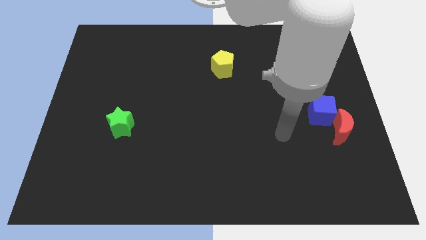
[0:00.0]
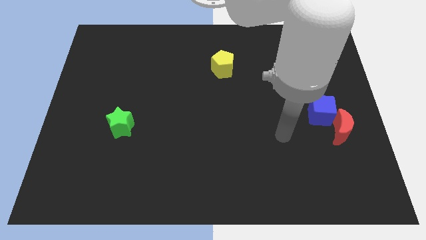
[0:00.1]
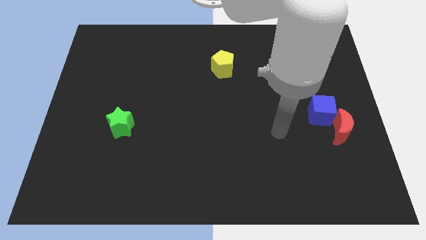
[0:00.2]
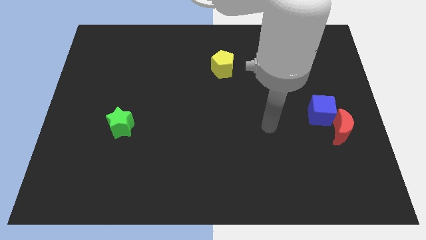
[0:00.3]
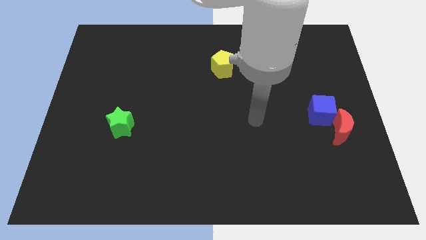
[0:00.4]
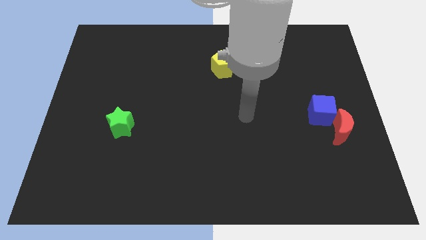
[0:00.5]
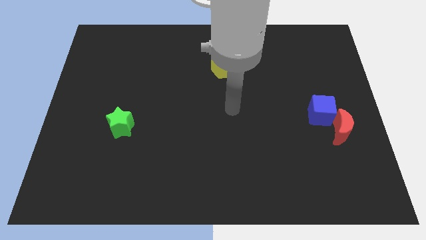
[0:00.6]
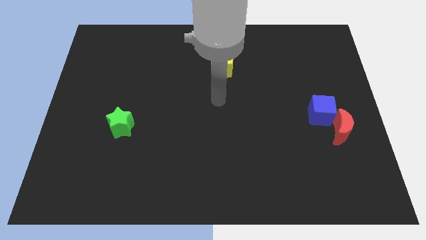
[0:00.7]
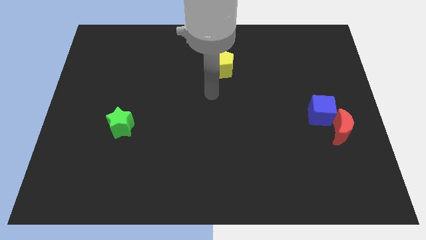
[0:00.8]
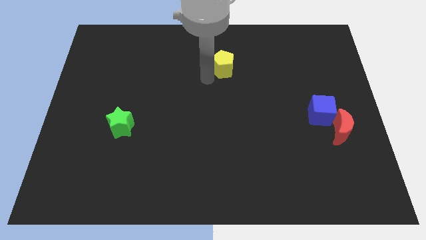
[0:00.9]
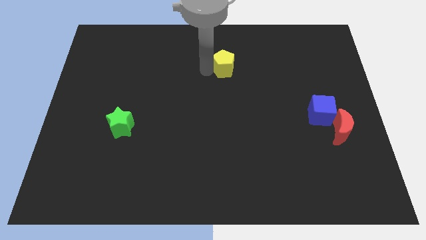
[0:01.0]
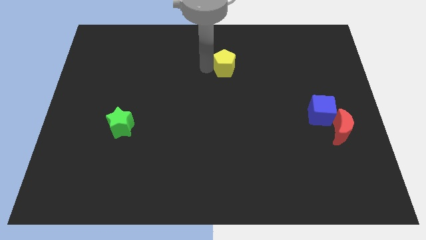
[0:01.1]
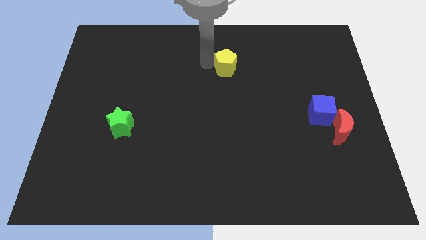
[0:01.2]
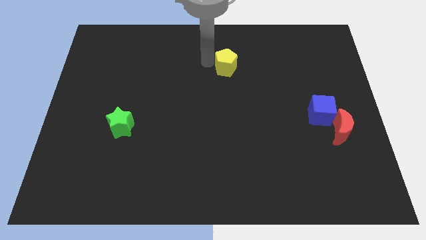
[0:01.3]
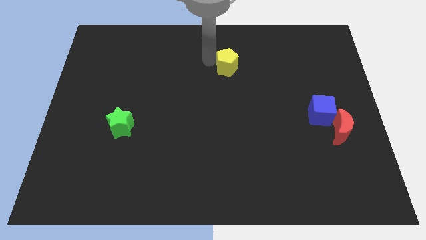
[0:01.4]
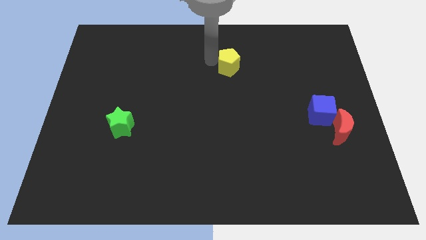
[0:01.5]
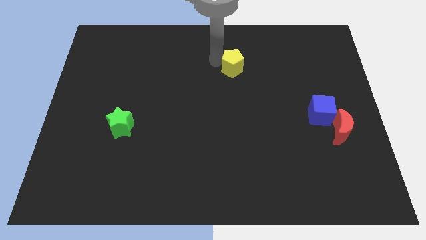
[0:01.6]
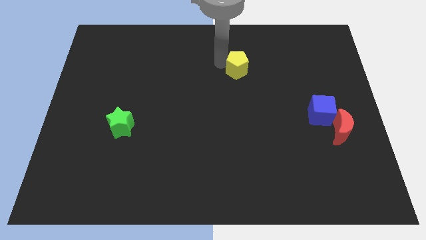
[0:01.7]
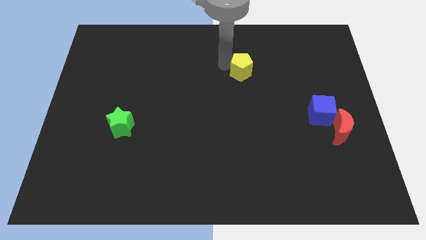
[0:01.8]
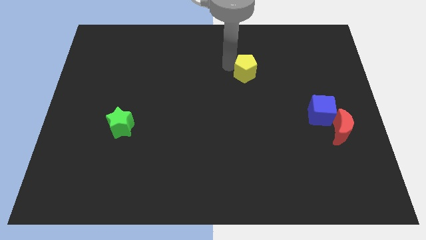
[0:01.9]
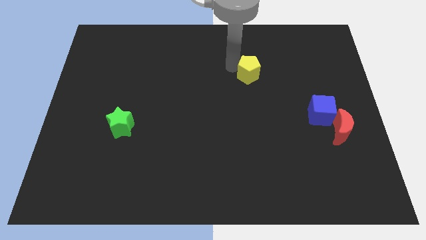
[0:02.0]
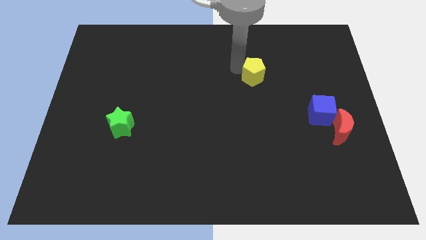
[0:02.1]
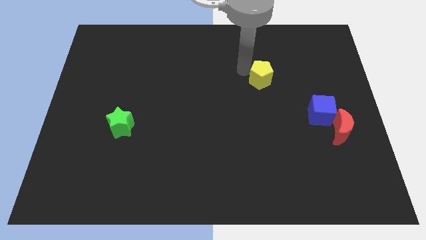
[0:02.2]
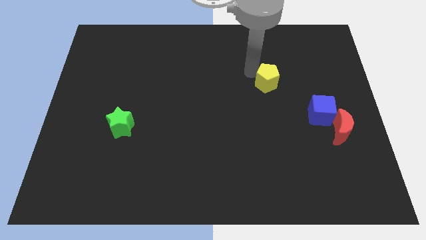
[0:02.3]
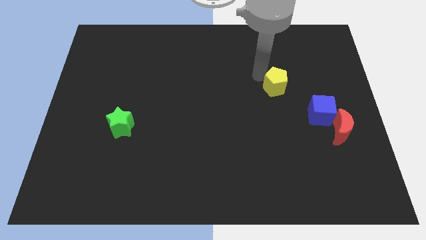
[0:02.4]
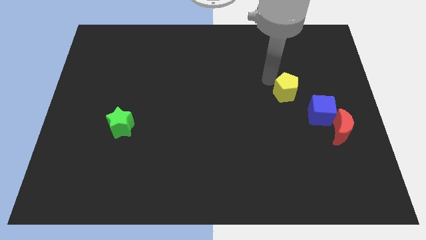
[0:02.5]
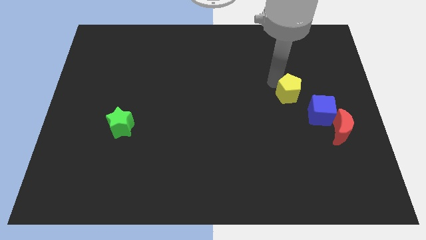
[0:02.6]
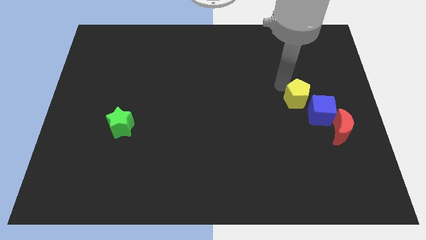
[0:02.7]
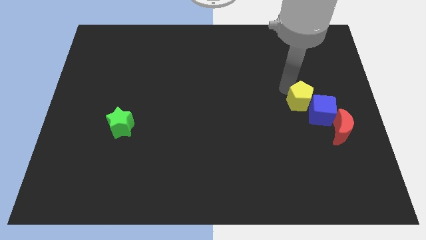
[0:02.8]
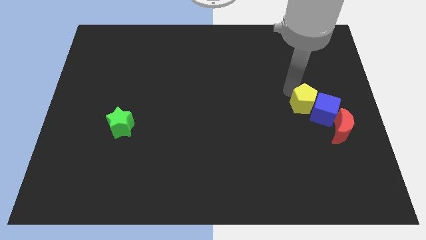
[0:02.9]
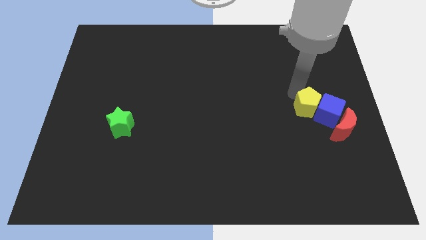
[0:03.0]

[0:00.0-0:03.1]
slide the yellow pentagon to the blue block

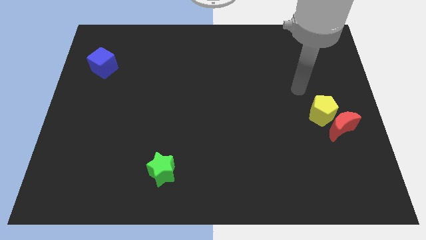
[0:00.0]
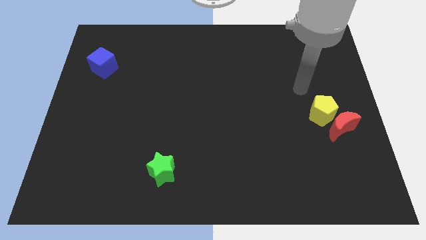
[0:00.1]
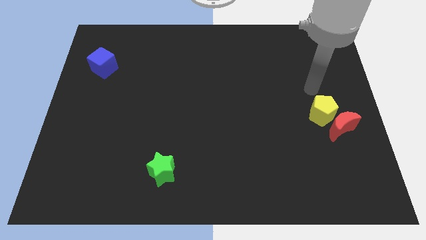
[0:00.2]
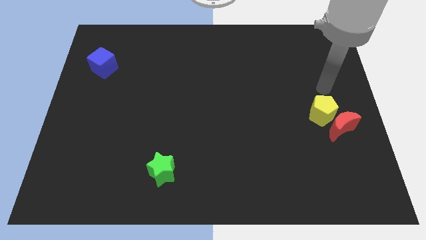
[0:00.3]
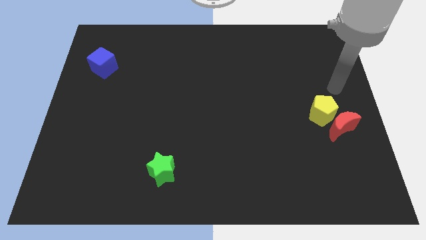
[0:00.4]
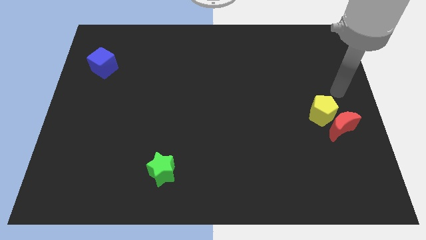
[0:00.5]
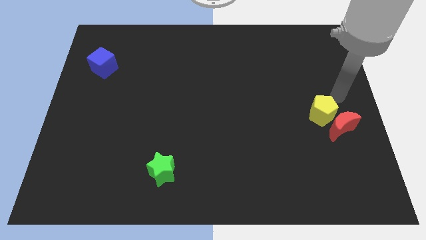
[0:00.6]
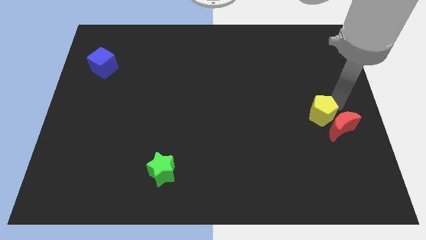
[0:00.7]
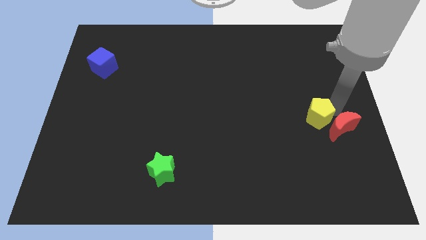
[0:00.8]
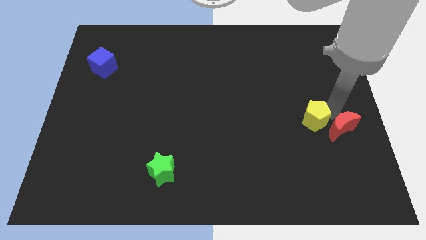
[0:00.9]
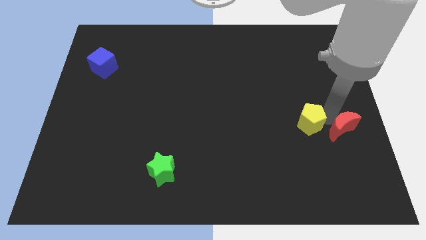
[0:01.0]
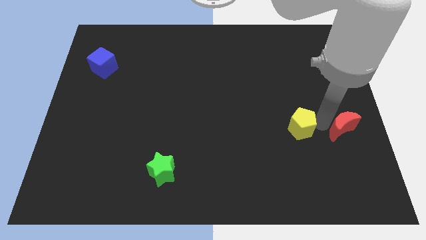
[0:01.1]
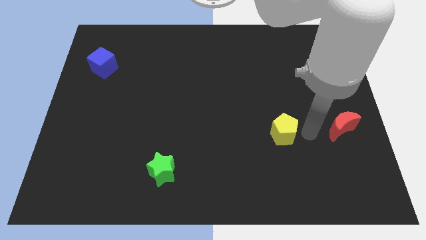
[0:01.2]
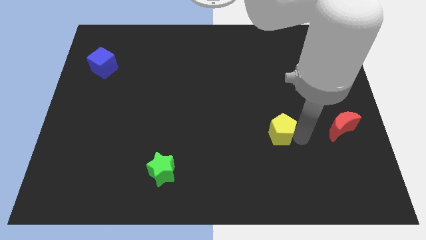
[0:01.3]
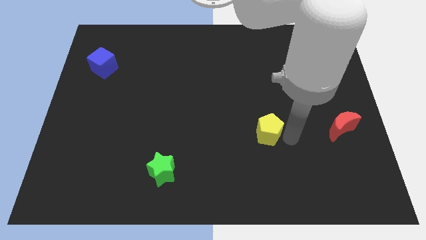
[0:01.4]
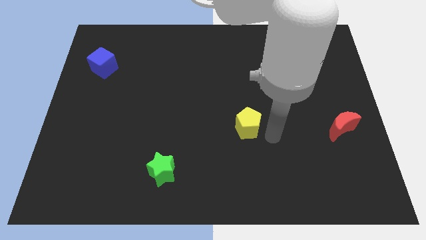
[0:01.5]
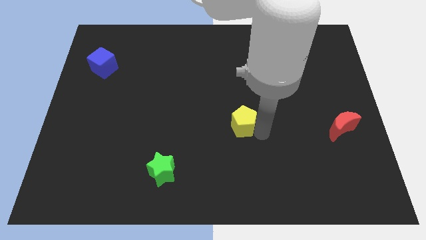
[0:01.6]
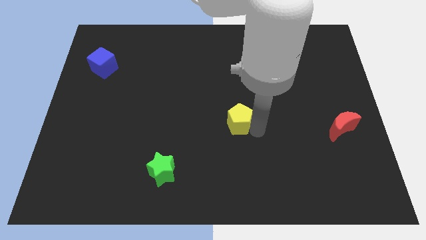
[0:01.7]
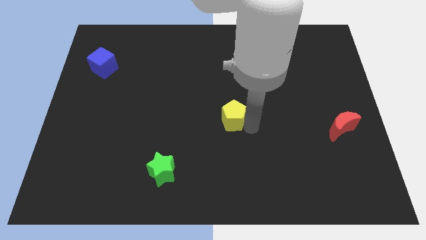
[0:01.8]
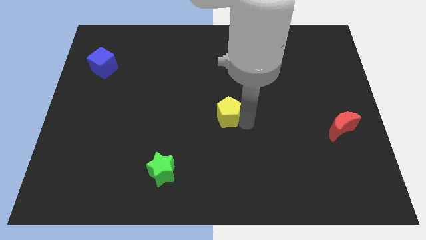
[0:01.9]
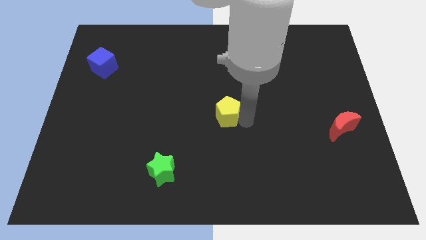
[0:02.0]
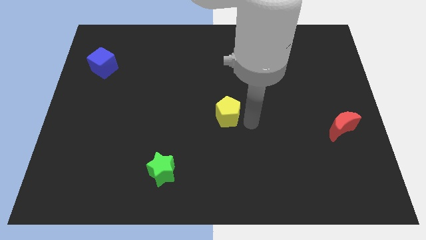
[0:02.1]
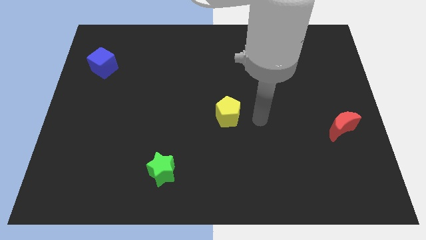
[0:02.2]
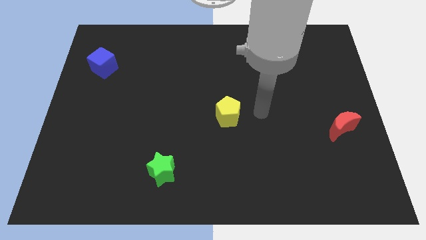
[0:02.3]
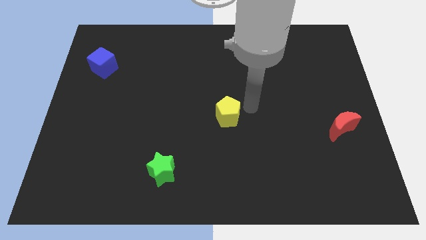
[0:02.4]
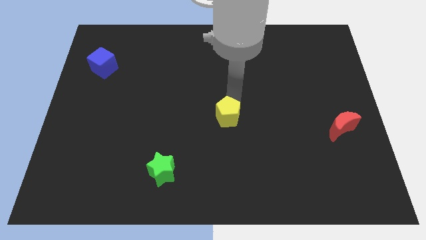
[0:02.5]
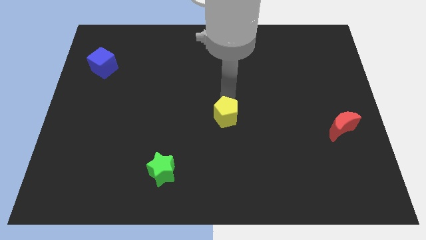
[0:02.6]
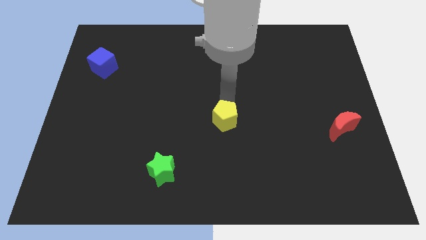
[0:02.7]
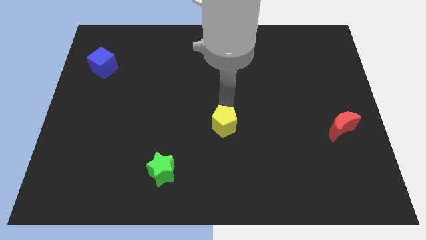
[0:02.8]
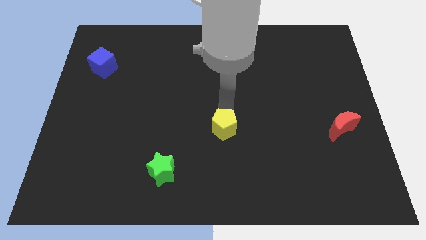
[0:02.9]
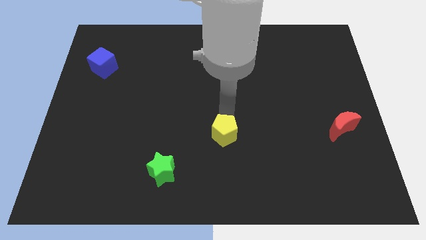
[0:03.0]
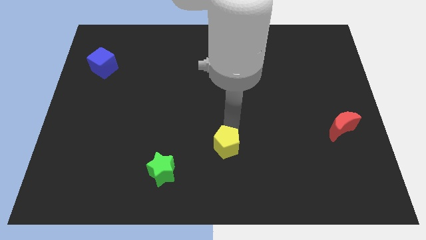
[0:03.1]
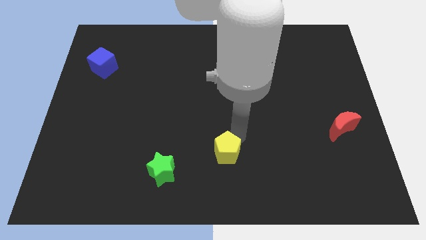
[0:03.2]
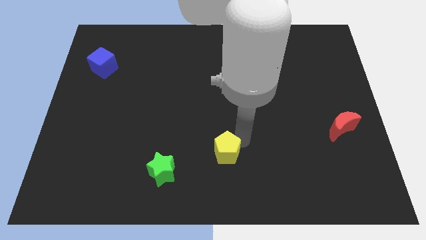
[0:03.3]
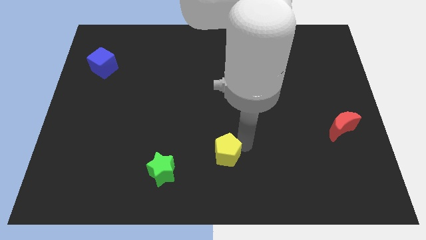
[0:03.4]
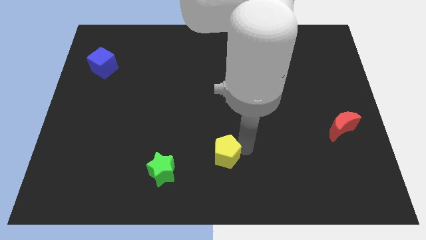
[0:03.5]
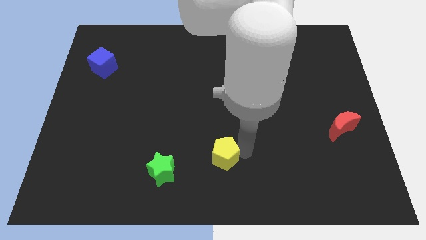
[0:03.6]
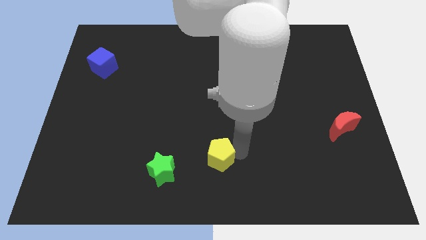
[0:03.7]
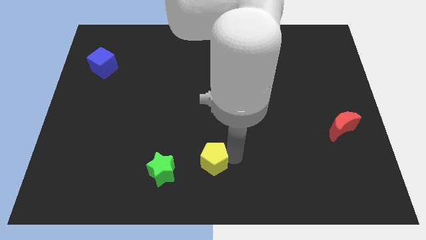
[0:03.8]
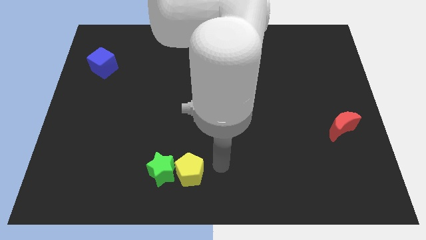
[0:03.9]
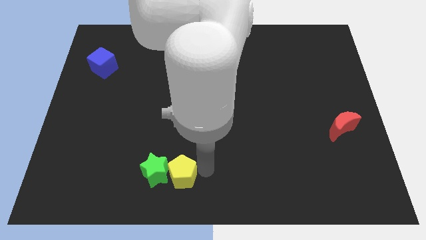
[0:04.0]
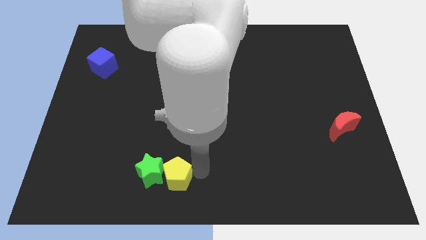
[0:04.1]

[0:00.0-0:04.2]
put the pentagon towards the green block

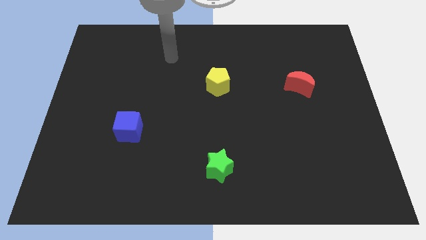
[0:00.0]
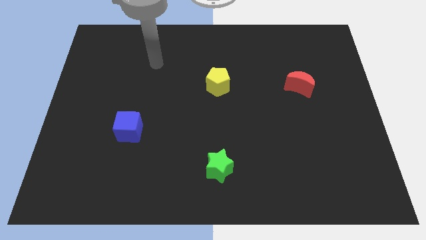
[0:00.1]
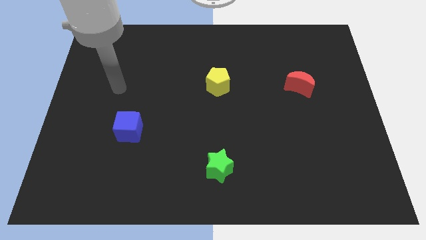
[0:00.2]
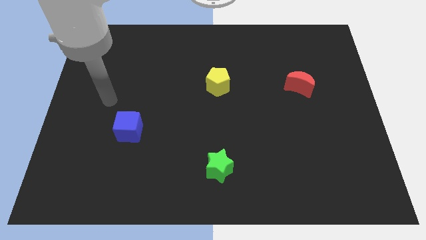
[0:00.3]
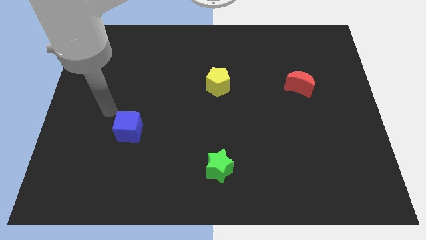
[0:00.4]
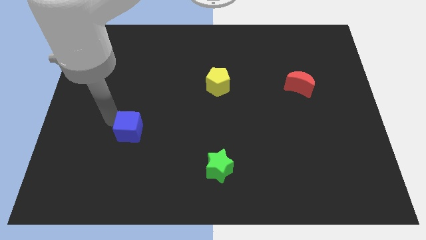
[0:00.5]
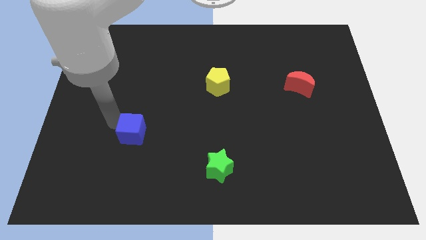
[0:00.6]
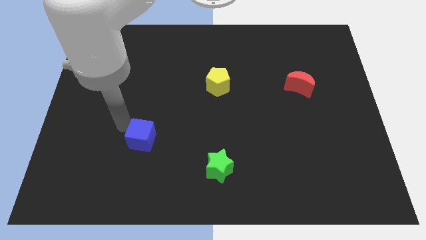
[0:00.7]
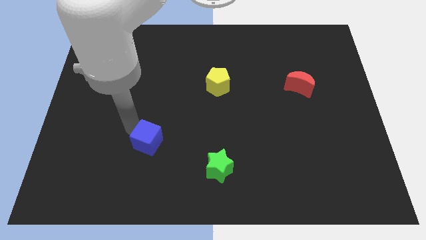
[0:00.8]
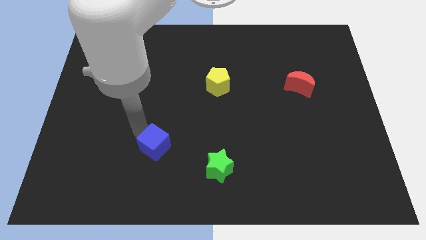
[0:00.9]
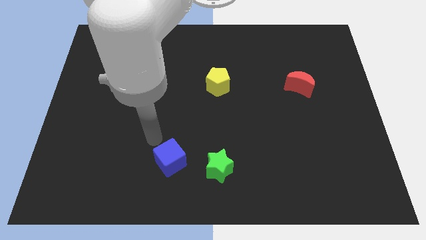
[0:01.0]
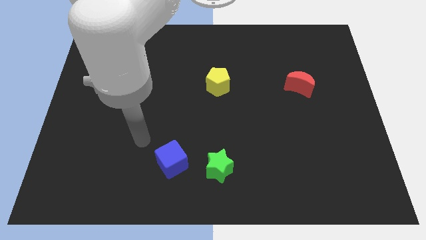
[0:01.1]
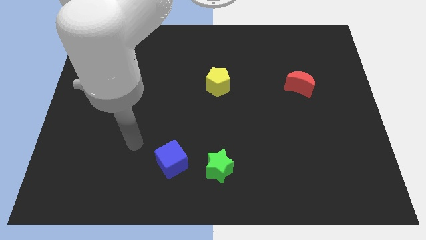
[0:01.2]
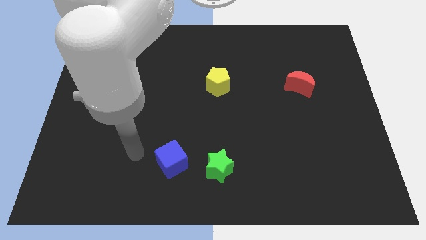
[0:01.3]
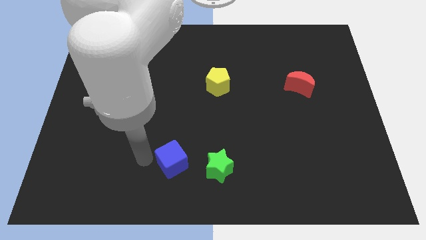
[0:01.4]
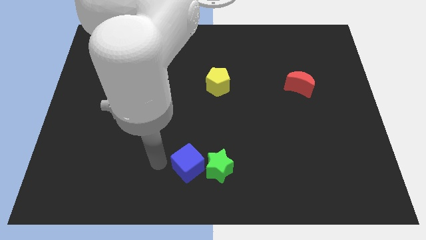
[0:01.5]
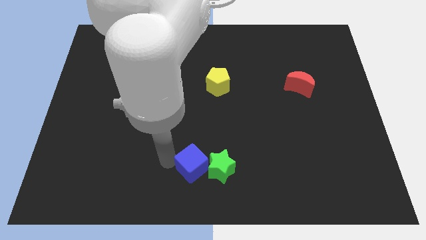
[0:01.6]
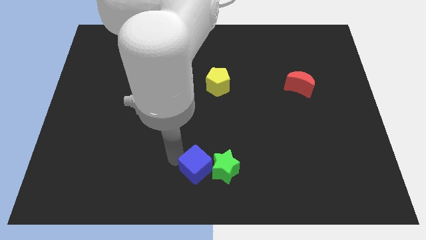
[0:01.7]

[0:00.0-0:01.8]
put the blue block to the star
